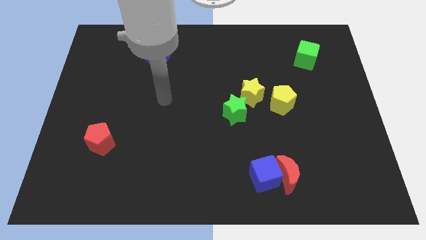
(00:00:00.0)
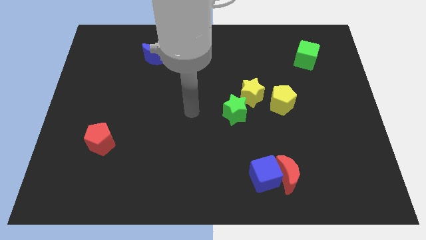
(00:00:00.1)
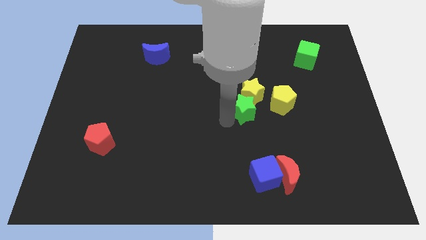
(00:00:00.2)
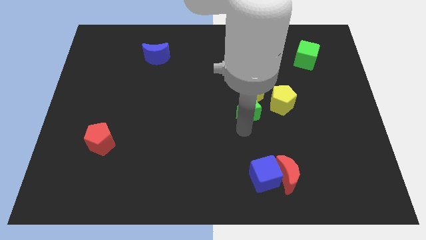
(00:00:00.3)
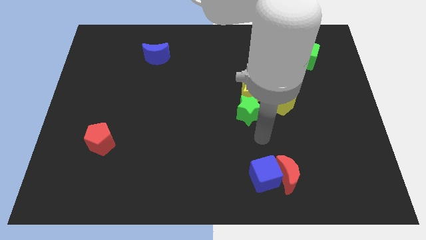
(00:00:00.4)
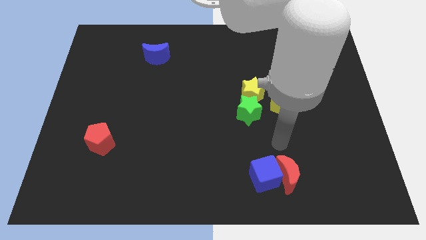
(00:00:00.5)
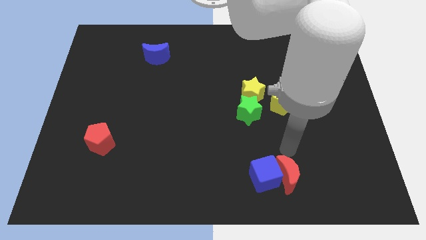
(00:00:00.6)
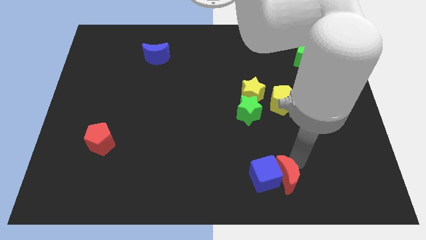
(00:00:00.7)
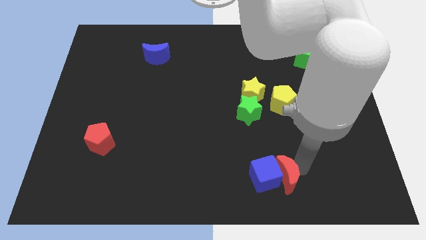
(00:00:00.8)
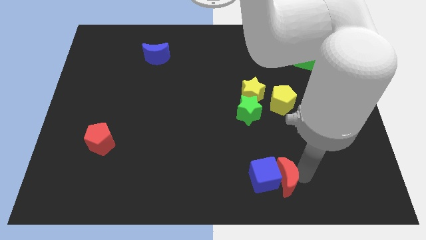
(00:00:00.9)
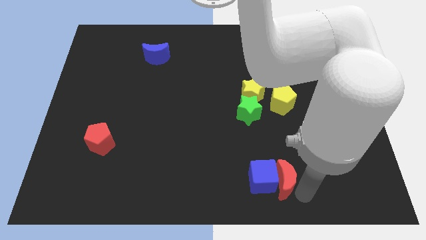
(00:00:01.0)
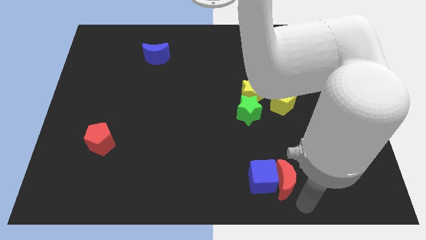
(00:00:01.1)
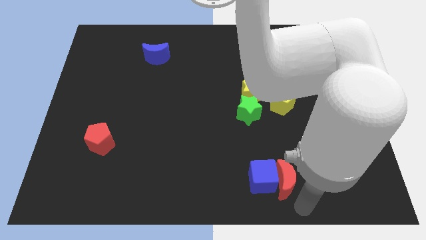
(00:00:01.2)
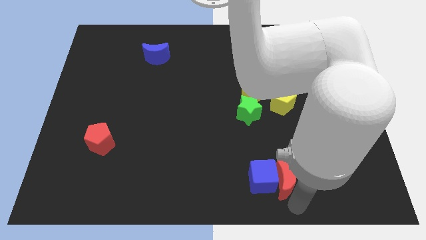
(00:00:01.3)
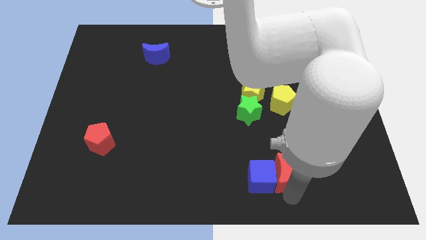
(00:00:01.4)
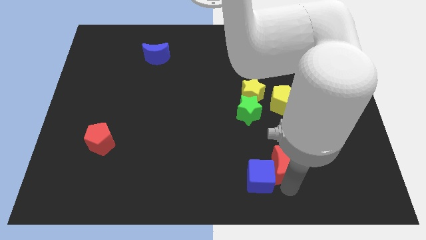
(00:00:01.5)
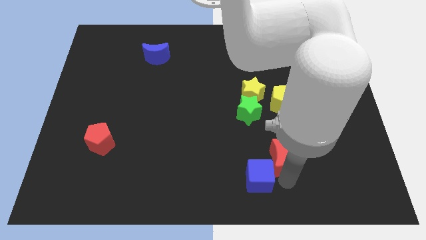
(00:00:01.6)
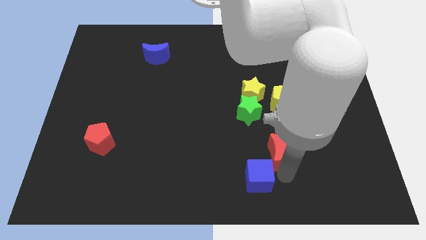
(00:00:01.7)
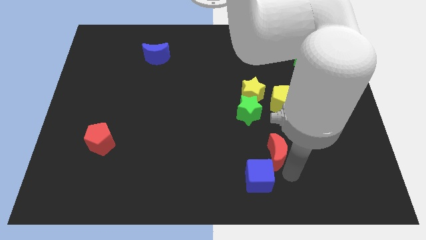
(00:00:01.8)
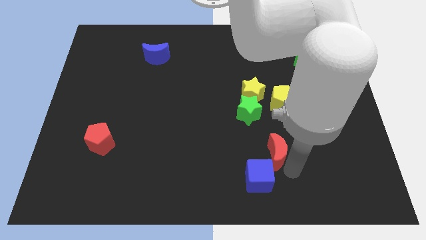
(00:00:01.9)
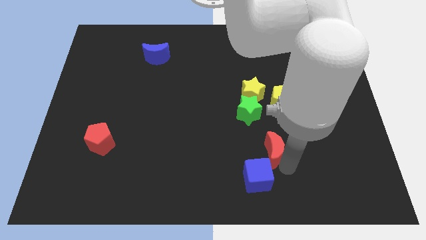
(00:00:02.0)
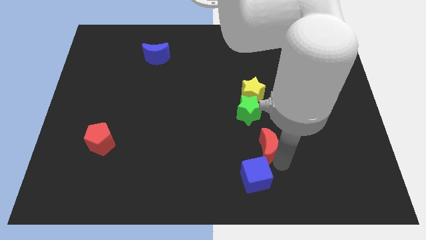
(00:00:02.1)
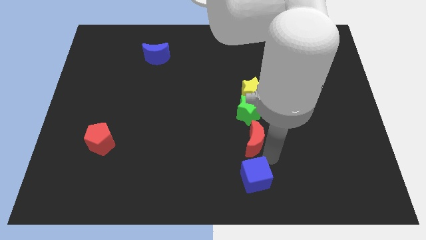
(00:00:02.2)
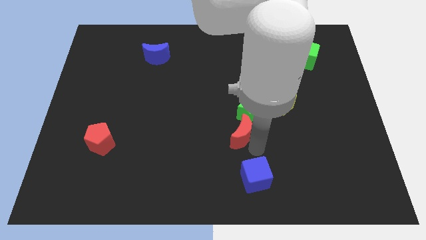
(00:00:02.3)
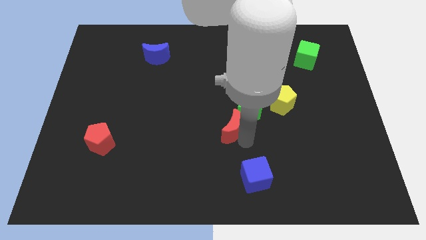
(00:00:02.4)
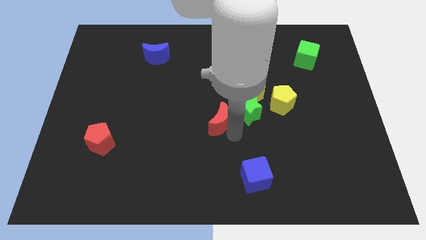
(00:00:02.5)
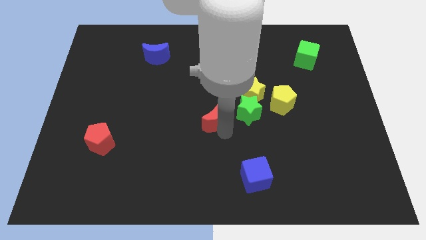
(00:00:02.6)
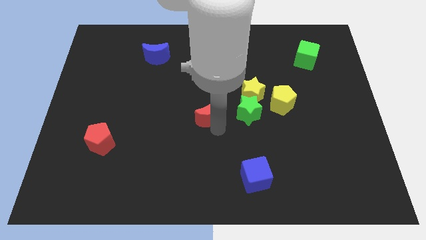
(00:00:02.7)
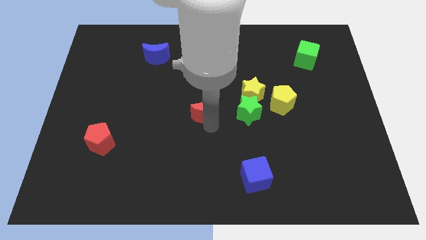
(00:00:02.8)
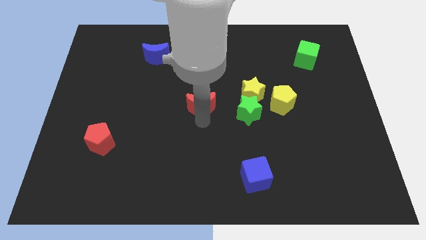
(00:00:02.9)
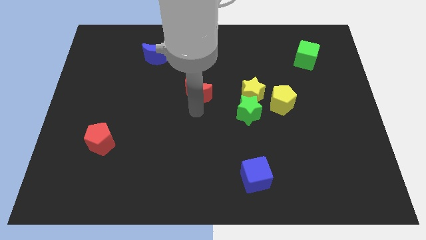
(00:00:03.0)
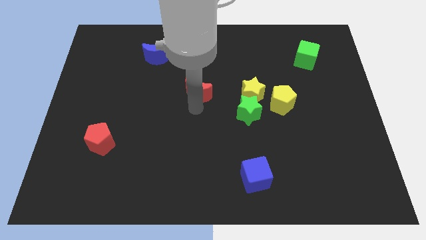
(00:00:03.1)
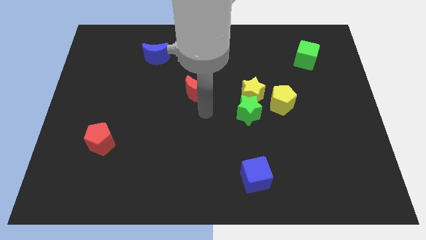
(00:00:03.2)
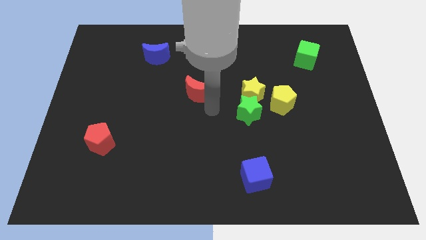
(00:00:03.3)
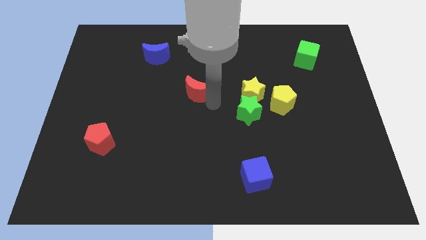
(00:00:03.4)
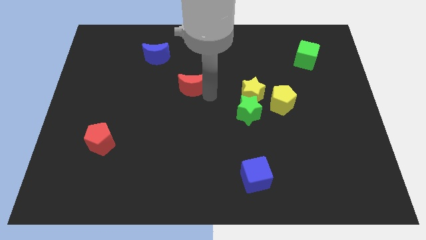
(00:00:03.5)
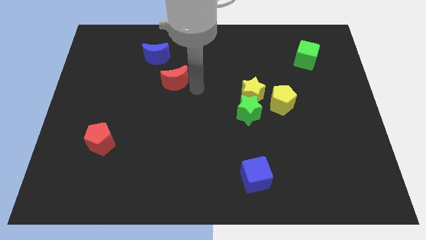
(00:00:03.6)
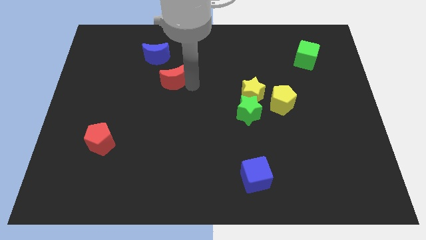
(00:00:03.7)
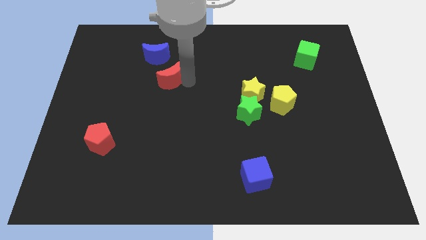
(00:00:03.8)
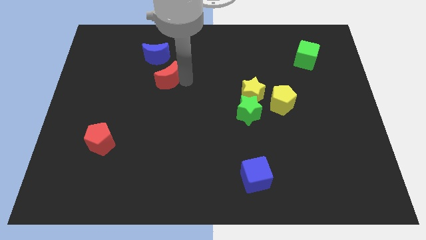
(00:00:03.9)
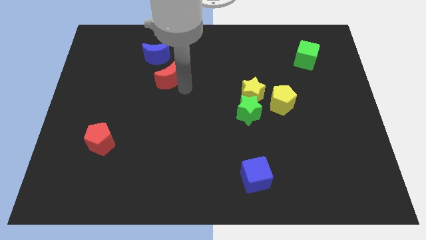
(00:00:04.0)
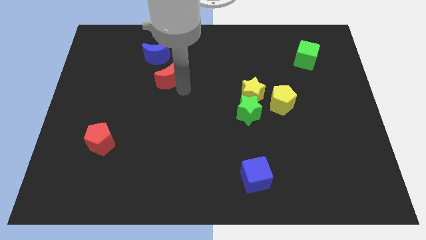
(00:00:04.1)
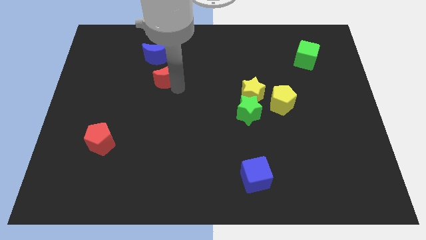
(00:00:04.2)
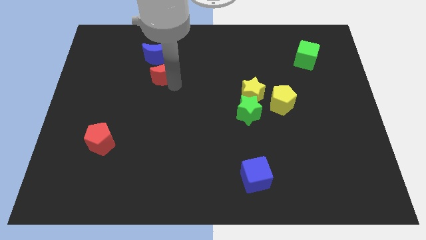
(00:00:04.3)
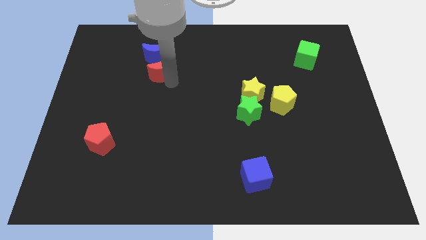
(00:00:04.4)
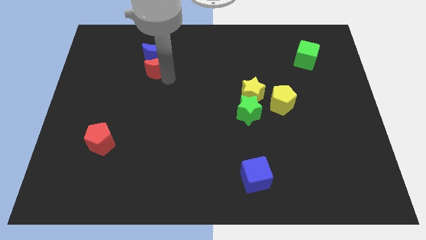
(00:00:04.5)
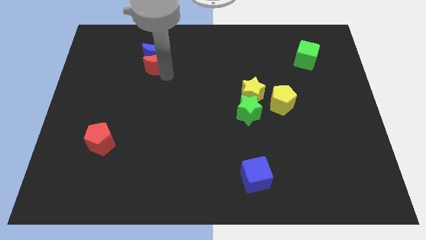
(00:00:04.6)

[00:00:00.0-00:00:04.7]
move the red moon towards the blue moon

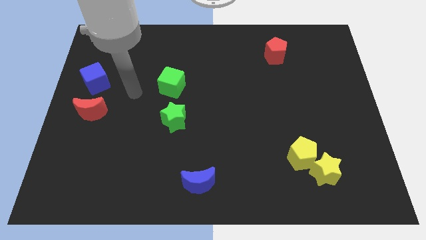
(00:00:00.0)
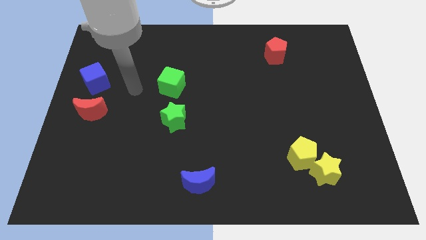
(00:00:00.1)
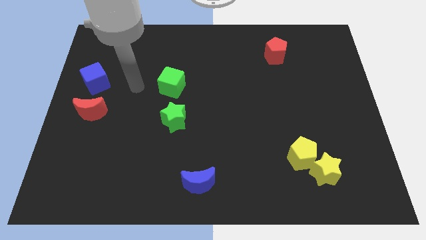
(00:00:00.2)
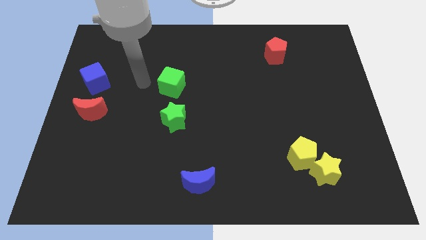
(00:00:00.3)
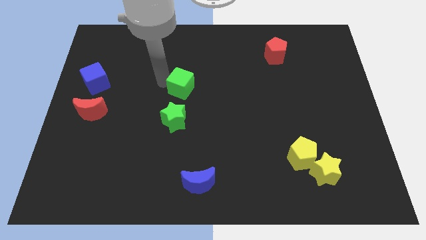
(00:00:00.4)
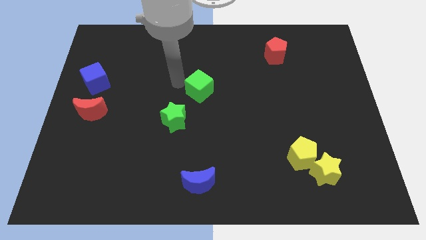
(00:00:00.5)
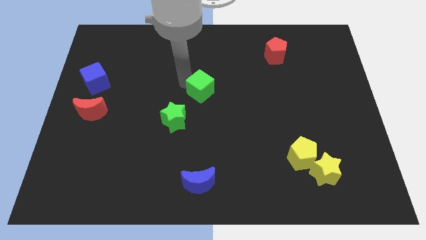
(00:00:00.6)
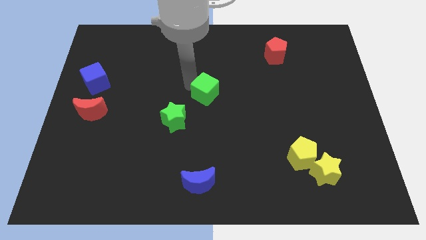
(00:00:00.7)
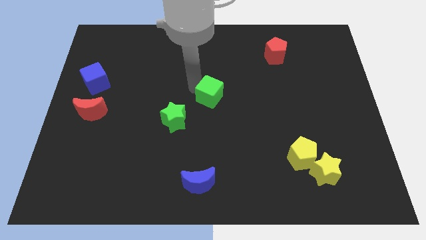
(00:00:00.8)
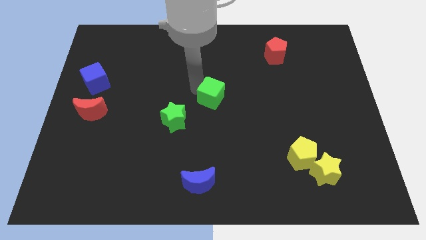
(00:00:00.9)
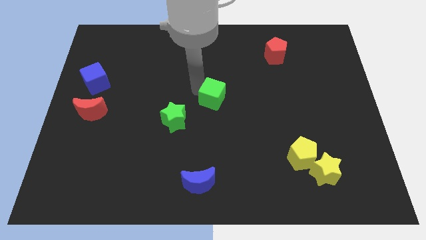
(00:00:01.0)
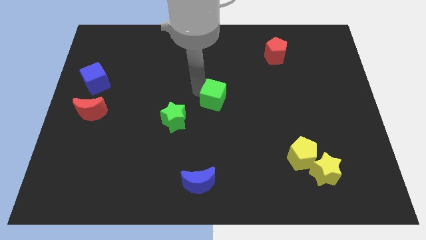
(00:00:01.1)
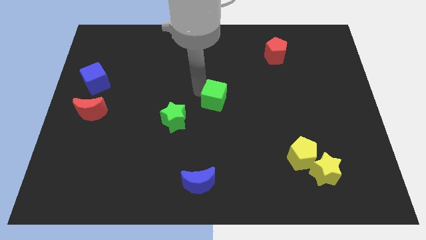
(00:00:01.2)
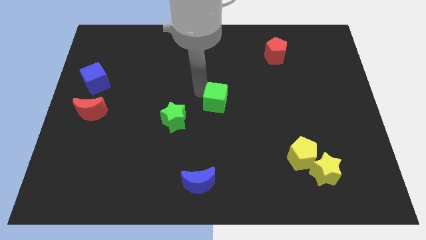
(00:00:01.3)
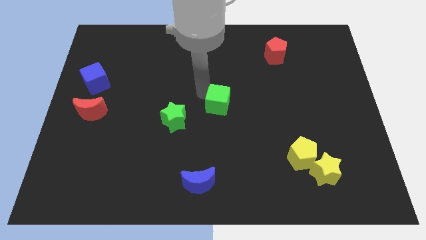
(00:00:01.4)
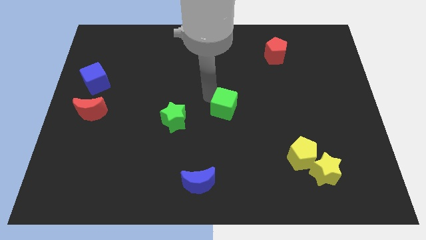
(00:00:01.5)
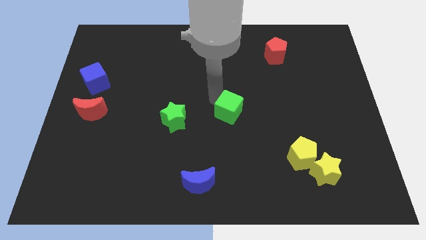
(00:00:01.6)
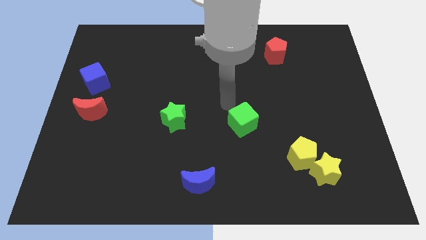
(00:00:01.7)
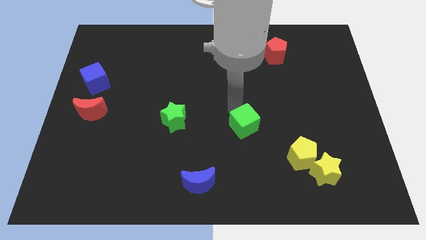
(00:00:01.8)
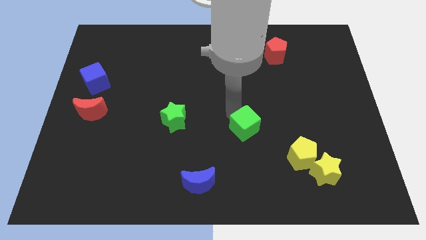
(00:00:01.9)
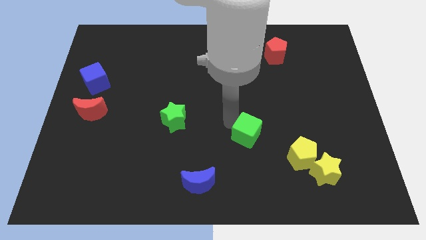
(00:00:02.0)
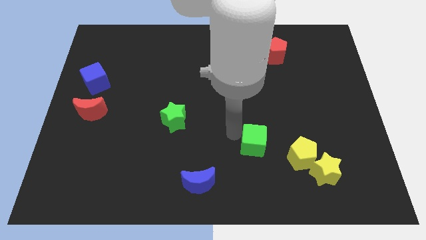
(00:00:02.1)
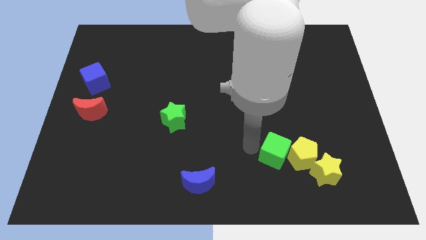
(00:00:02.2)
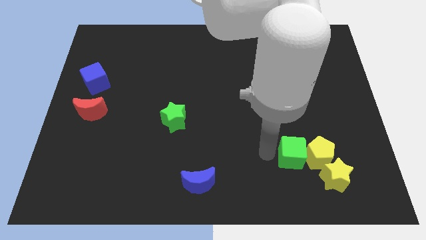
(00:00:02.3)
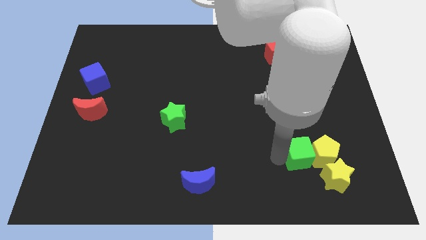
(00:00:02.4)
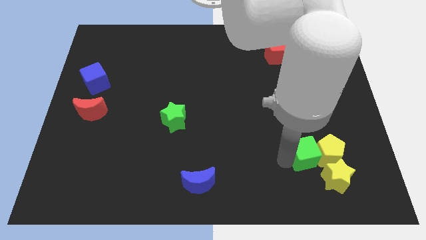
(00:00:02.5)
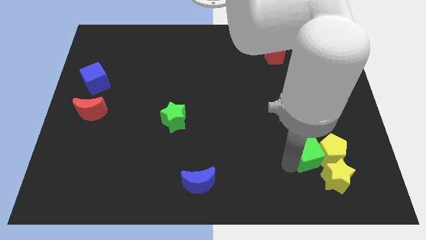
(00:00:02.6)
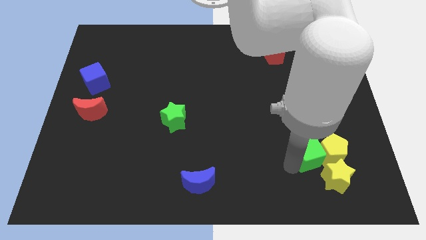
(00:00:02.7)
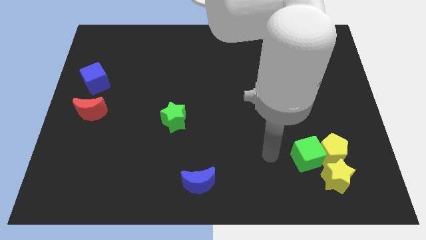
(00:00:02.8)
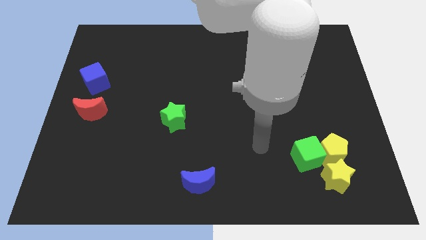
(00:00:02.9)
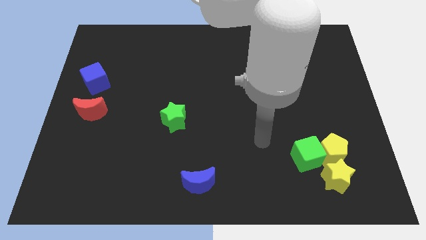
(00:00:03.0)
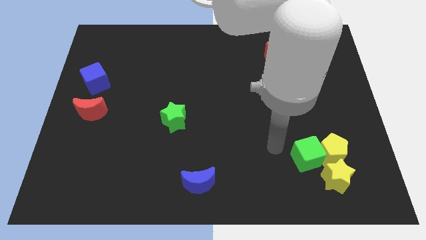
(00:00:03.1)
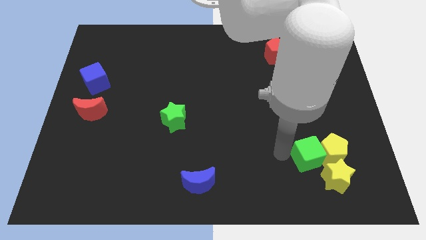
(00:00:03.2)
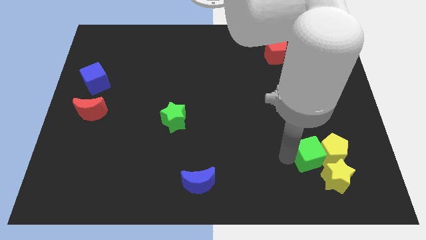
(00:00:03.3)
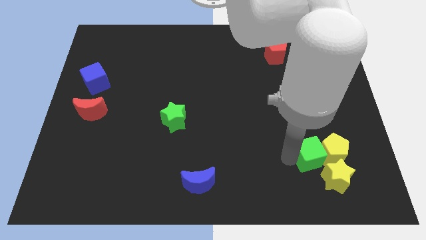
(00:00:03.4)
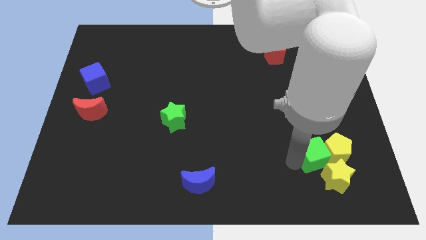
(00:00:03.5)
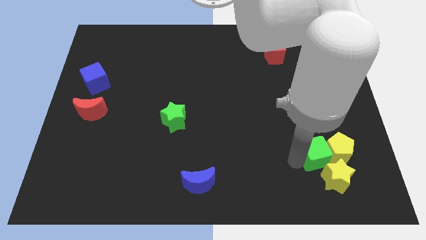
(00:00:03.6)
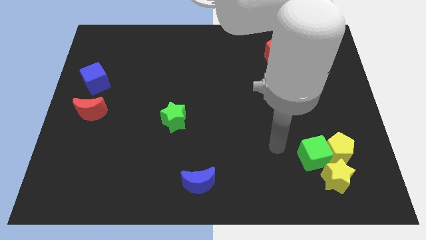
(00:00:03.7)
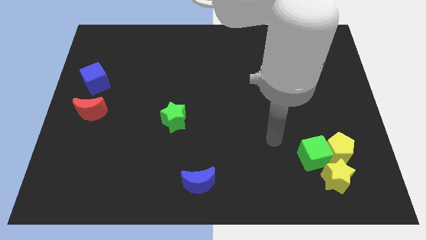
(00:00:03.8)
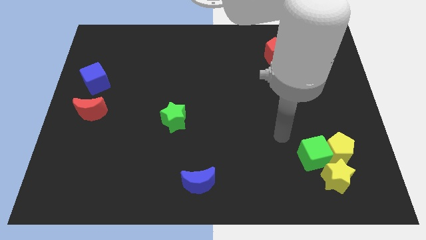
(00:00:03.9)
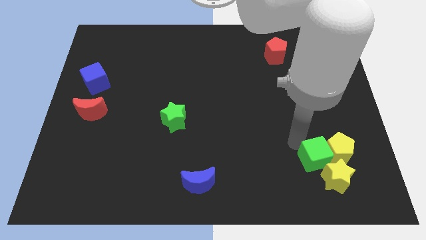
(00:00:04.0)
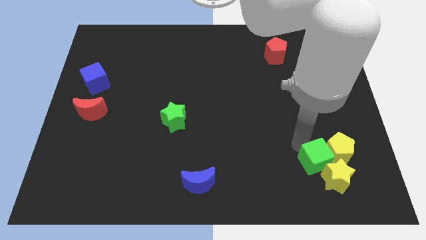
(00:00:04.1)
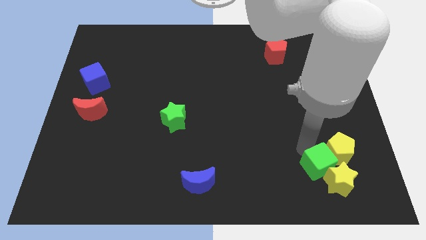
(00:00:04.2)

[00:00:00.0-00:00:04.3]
push the green cube towards the yellow star
